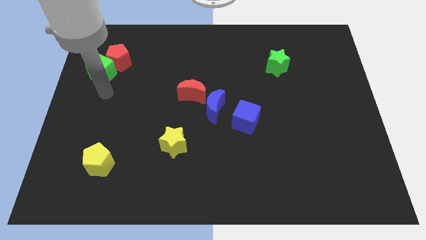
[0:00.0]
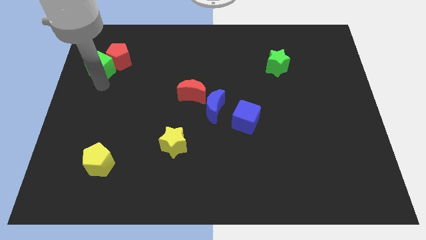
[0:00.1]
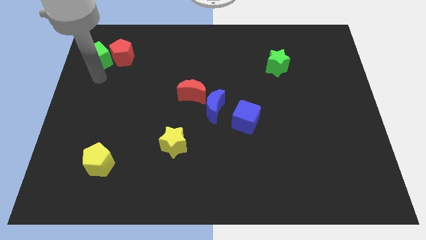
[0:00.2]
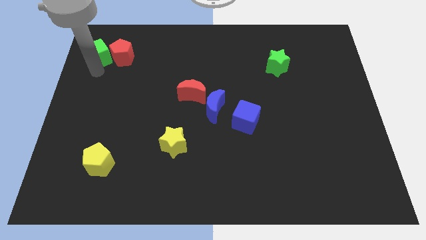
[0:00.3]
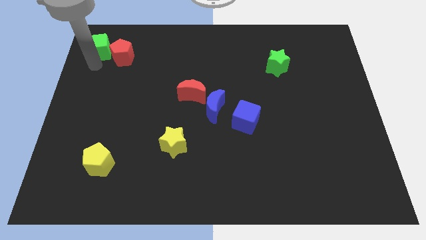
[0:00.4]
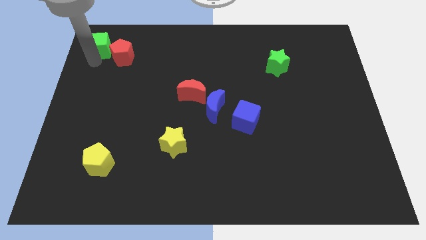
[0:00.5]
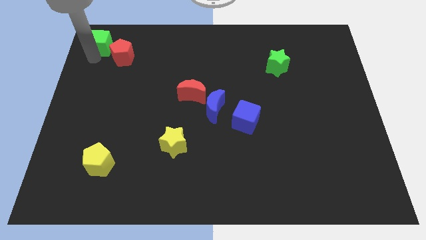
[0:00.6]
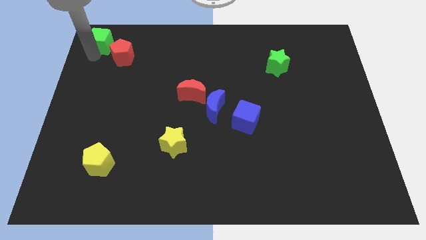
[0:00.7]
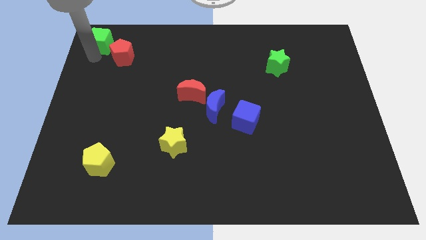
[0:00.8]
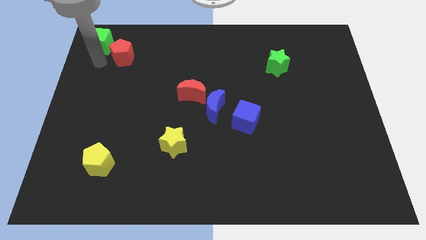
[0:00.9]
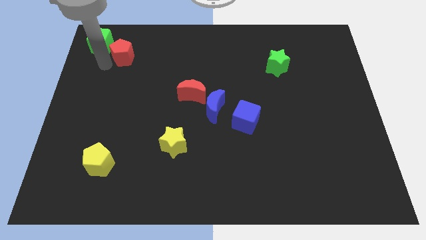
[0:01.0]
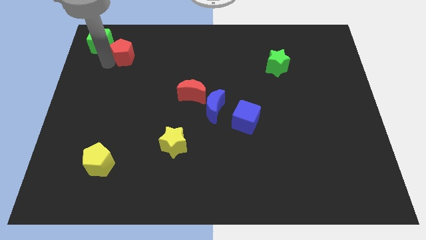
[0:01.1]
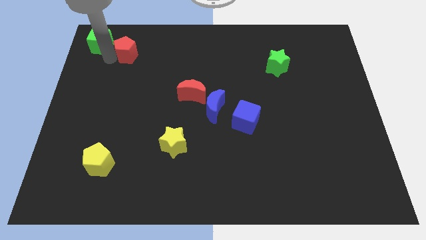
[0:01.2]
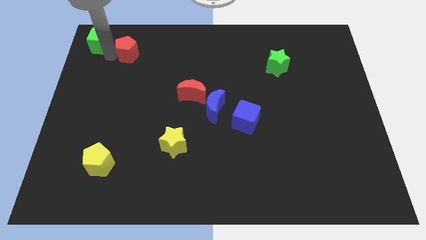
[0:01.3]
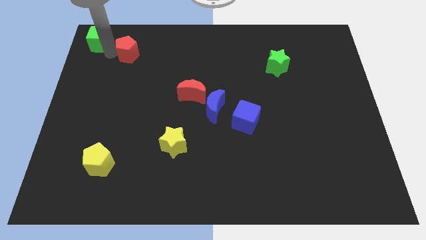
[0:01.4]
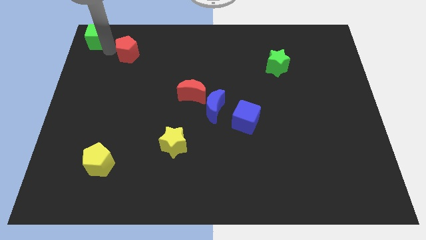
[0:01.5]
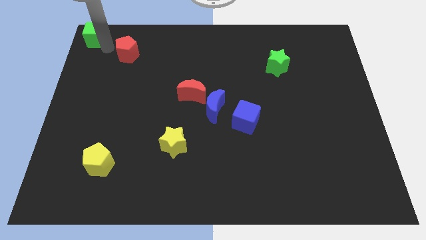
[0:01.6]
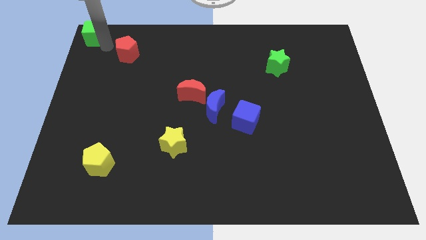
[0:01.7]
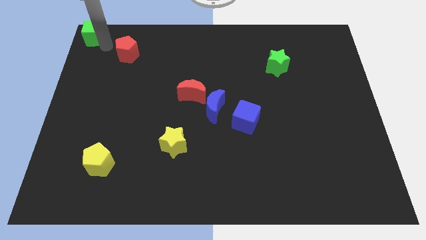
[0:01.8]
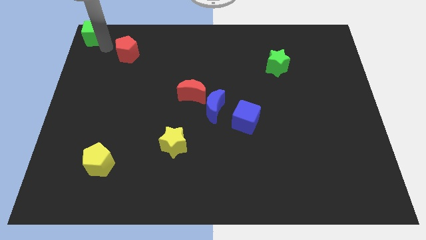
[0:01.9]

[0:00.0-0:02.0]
move the green cube away from the left side of the red pentagon

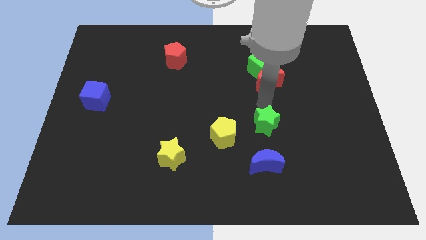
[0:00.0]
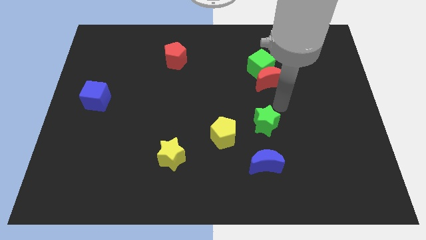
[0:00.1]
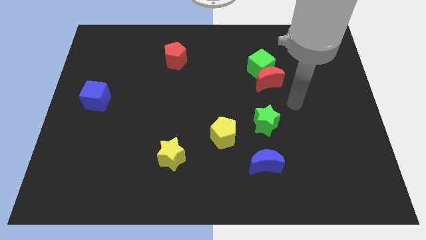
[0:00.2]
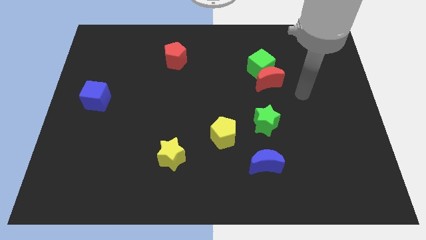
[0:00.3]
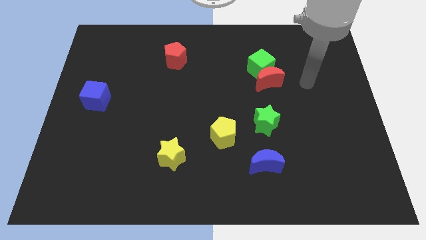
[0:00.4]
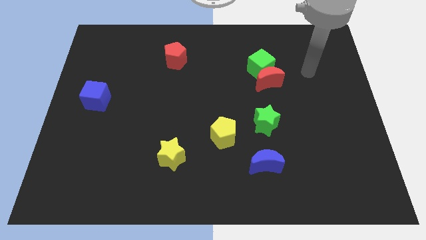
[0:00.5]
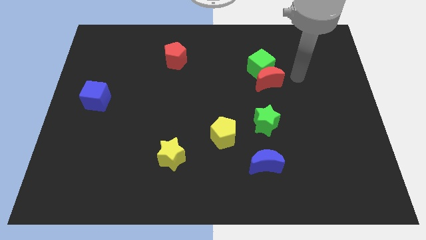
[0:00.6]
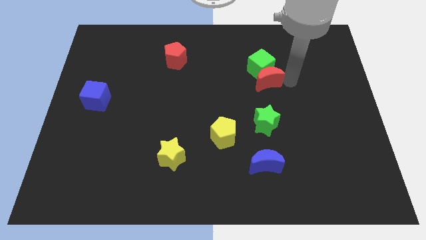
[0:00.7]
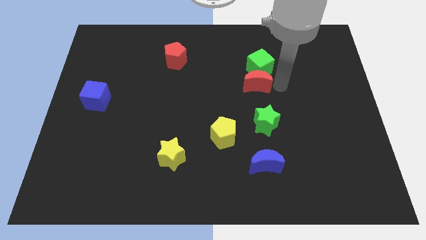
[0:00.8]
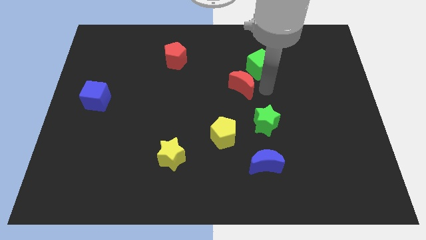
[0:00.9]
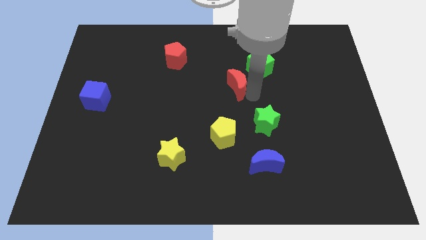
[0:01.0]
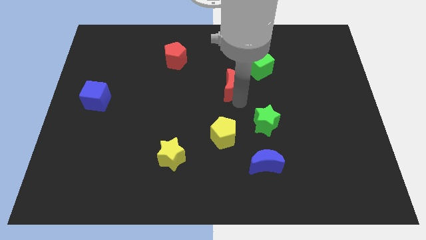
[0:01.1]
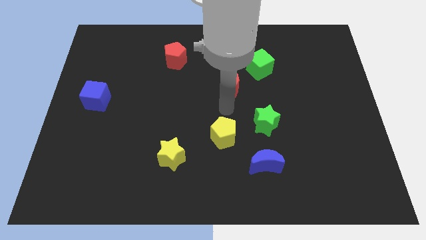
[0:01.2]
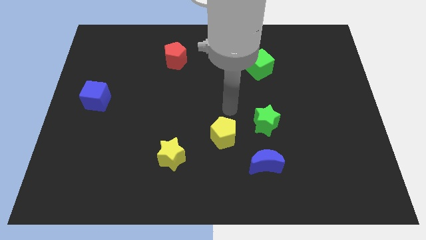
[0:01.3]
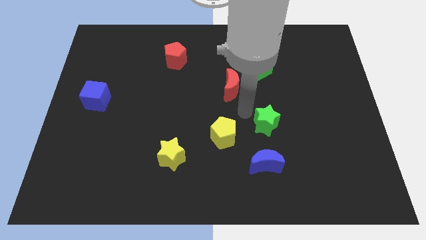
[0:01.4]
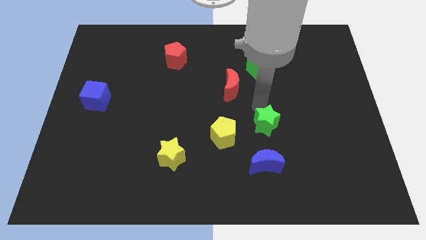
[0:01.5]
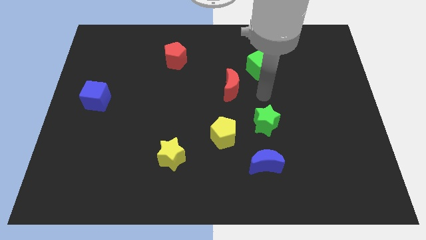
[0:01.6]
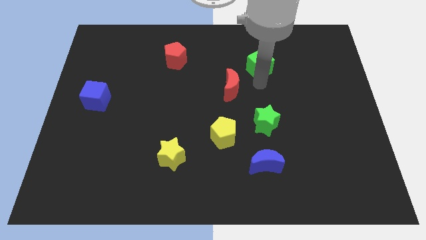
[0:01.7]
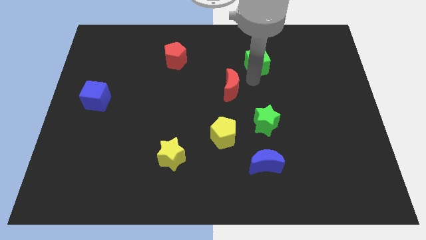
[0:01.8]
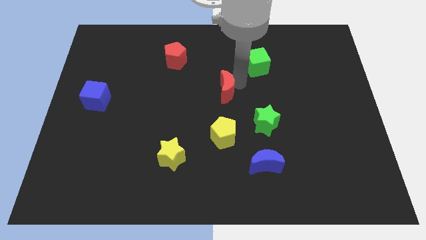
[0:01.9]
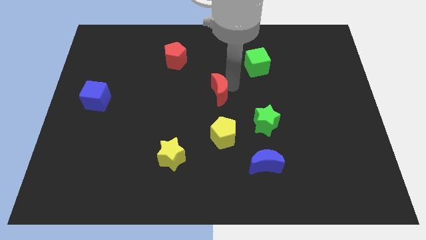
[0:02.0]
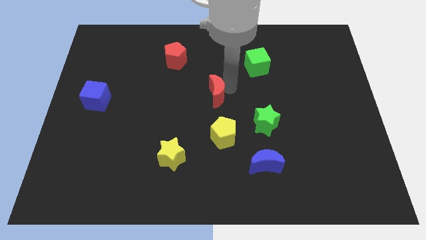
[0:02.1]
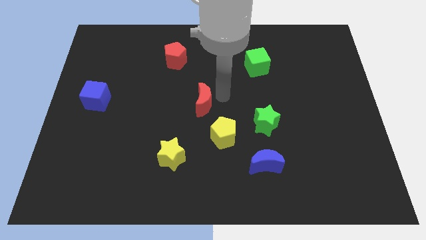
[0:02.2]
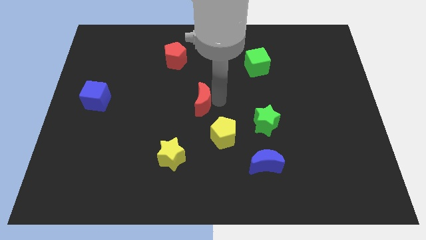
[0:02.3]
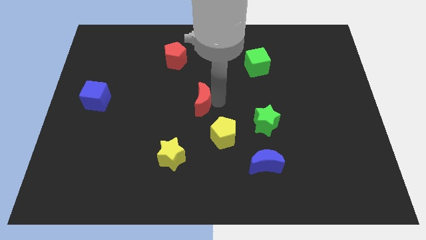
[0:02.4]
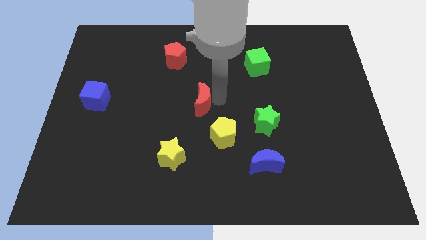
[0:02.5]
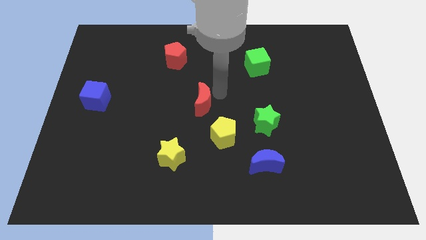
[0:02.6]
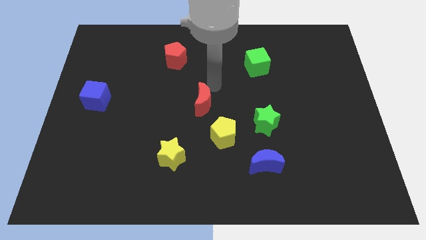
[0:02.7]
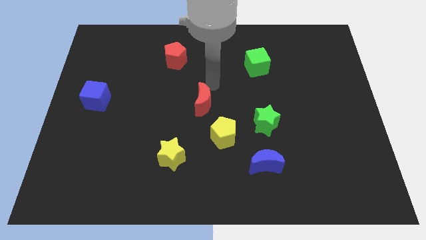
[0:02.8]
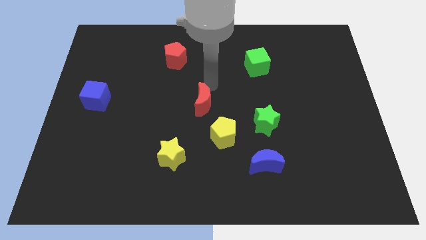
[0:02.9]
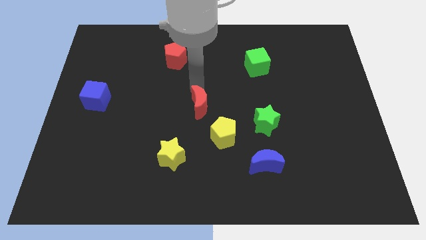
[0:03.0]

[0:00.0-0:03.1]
put the red moon between the red pentagon and yellow pentagon

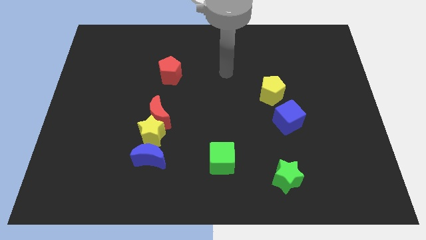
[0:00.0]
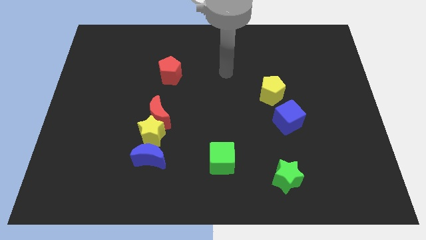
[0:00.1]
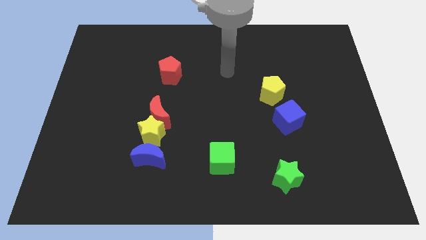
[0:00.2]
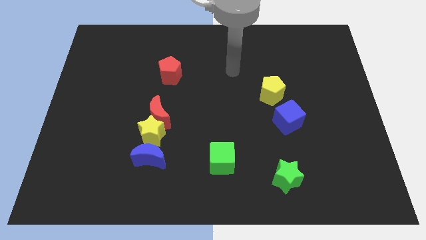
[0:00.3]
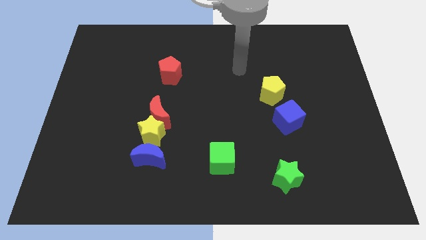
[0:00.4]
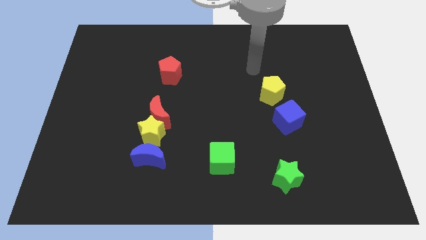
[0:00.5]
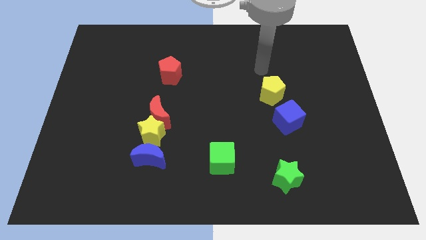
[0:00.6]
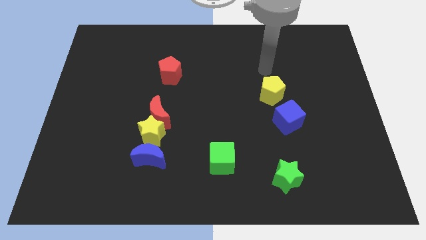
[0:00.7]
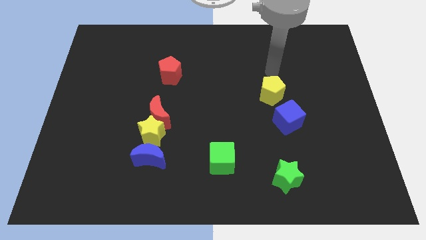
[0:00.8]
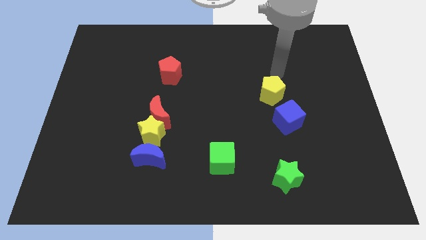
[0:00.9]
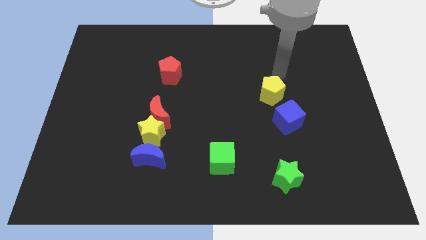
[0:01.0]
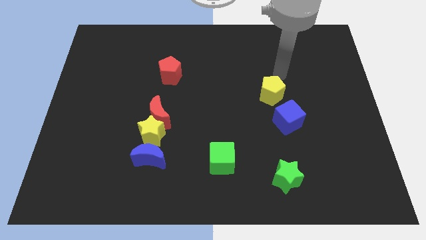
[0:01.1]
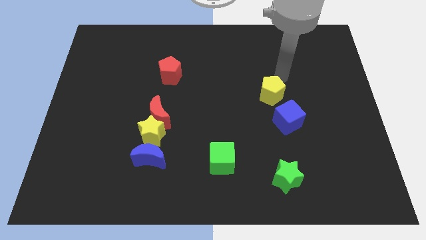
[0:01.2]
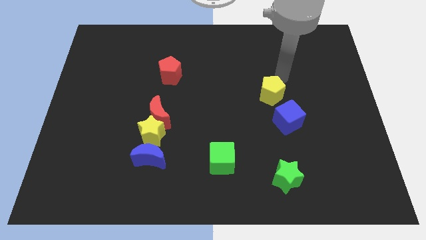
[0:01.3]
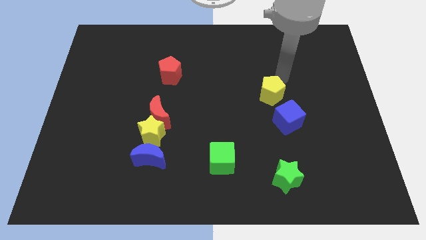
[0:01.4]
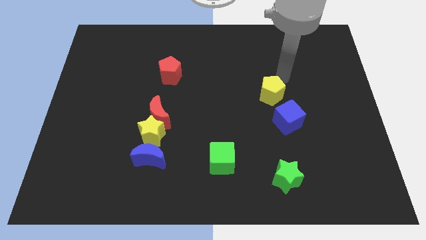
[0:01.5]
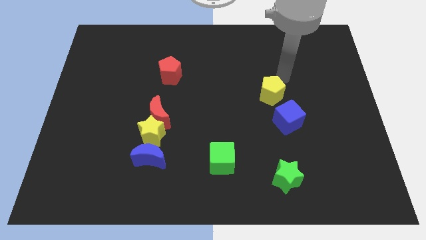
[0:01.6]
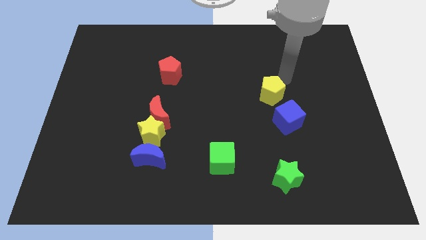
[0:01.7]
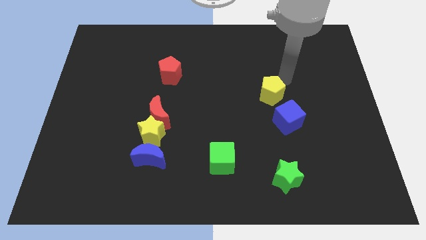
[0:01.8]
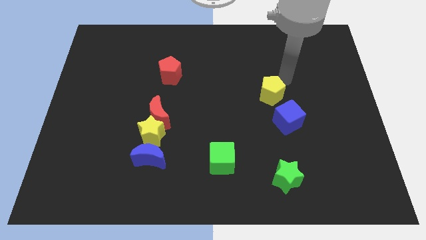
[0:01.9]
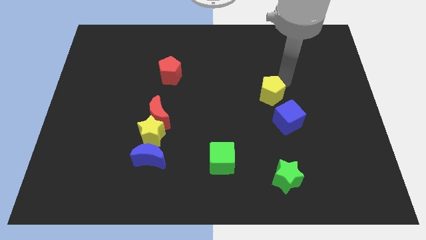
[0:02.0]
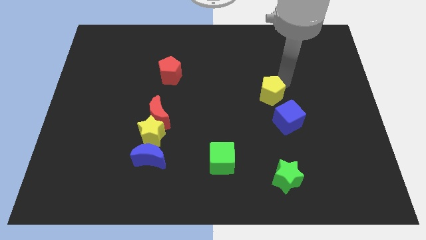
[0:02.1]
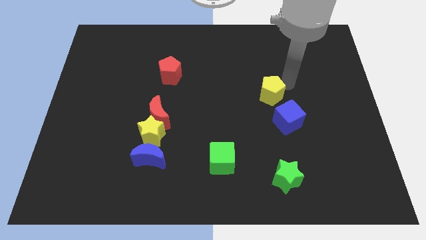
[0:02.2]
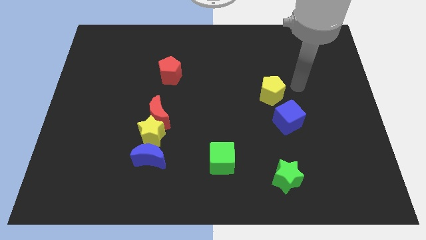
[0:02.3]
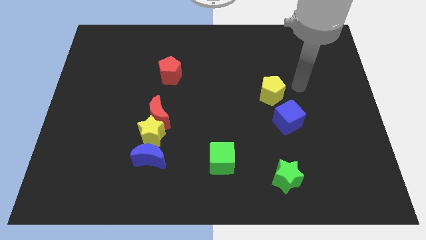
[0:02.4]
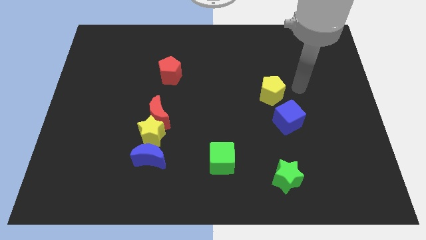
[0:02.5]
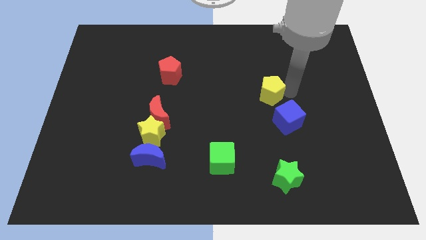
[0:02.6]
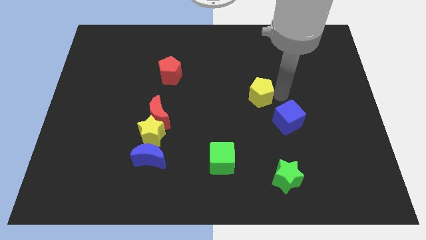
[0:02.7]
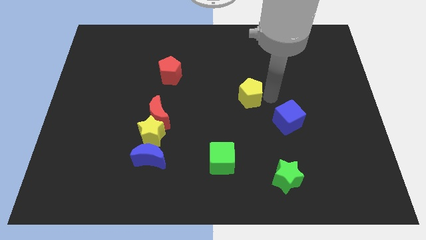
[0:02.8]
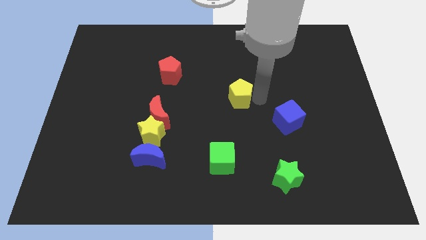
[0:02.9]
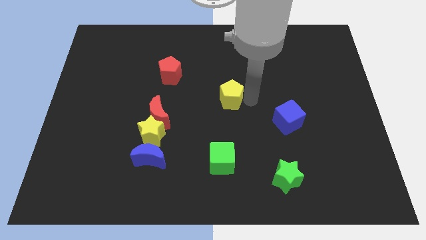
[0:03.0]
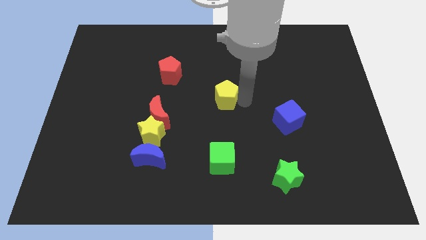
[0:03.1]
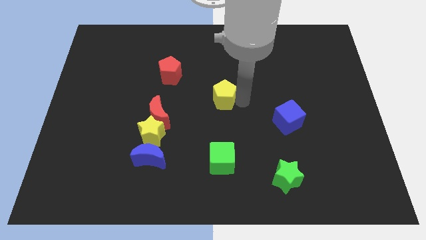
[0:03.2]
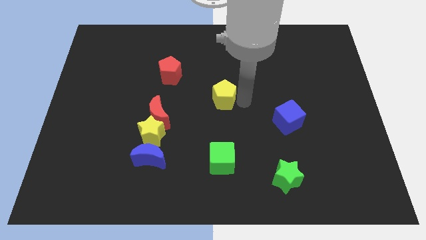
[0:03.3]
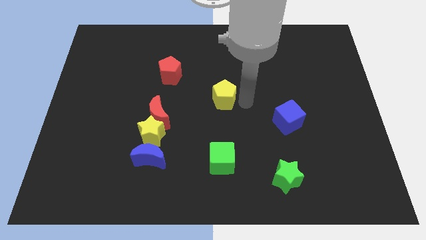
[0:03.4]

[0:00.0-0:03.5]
push yellow pentagon to the center

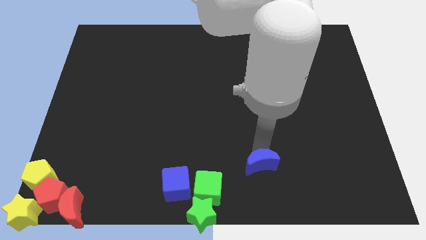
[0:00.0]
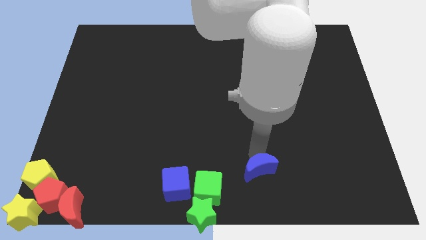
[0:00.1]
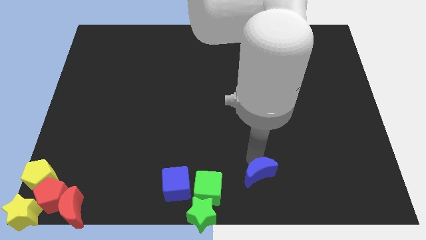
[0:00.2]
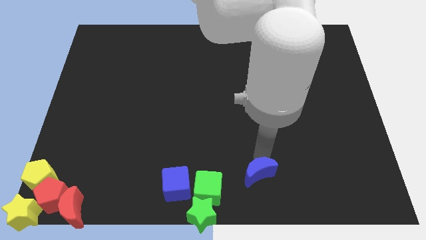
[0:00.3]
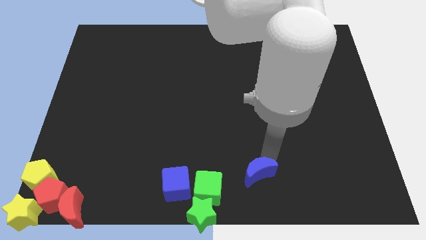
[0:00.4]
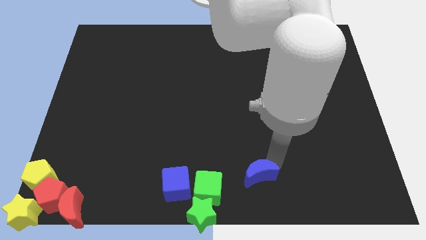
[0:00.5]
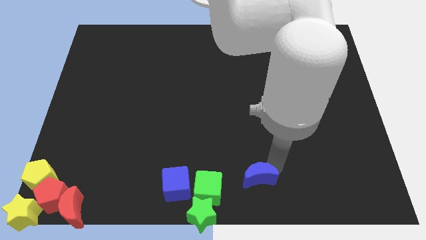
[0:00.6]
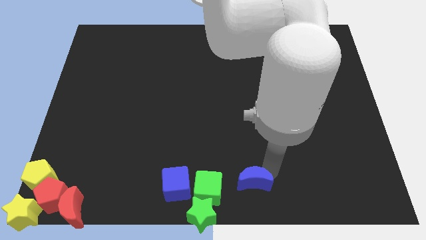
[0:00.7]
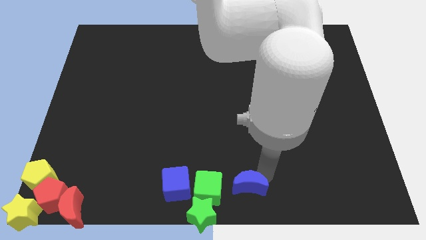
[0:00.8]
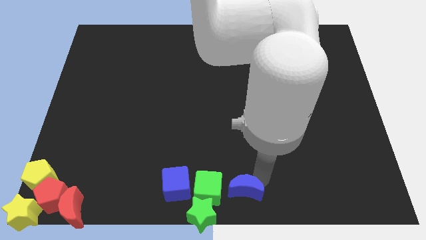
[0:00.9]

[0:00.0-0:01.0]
place the blue moon to the right side of green cube
